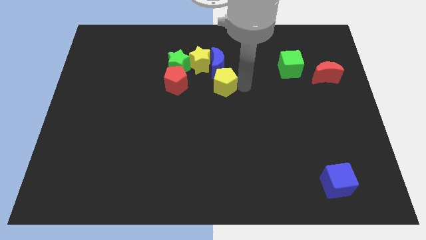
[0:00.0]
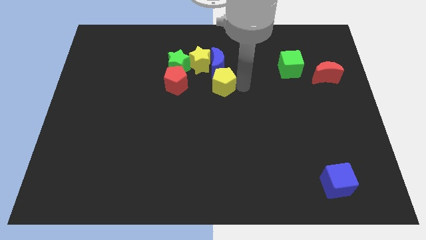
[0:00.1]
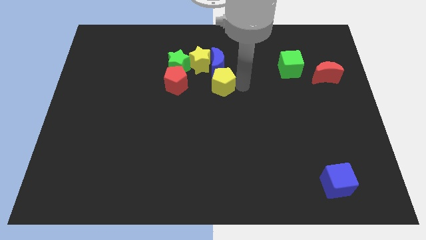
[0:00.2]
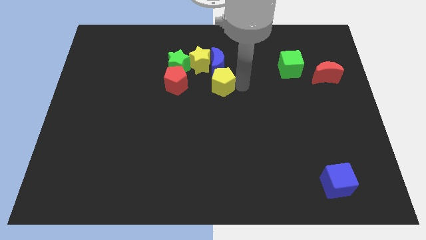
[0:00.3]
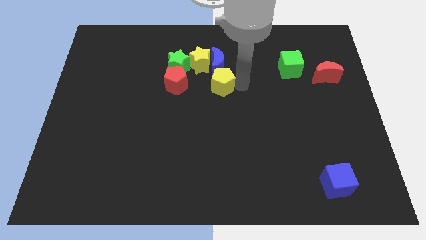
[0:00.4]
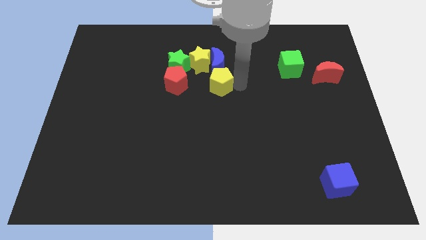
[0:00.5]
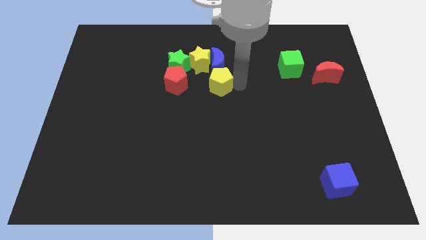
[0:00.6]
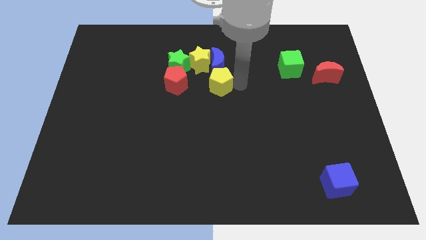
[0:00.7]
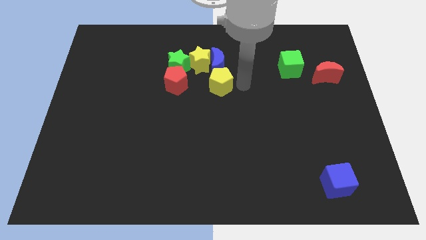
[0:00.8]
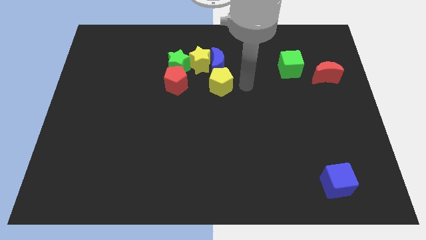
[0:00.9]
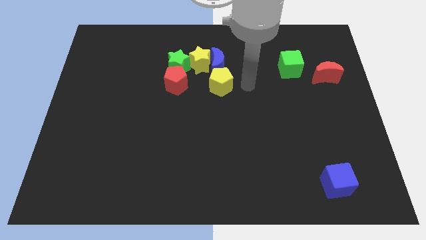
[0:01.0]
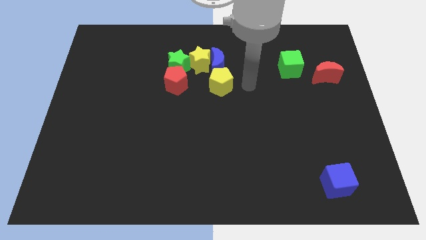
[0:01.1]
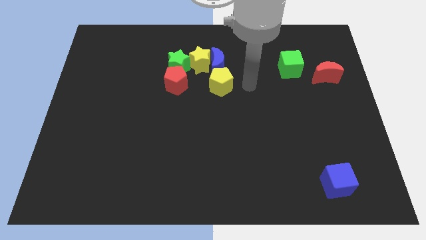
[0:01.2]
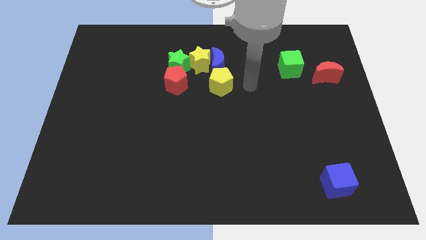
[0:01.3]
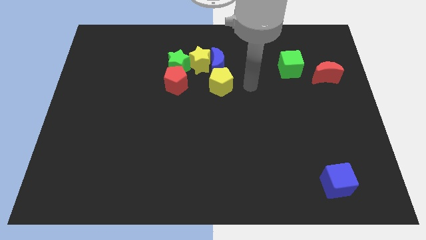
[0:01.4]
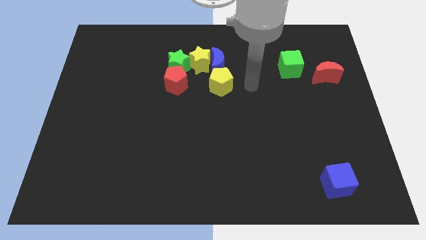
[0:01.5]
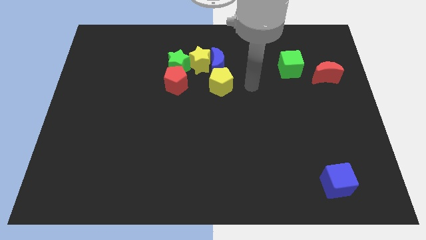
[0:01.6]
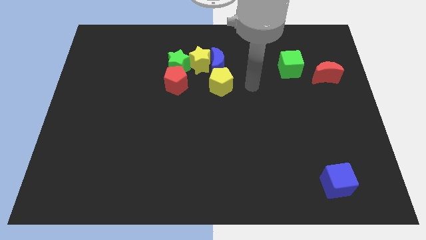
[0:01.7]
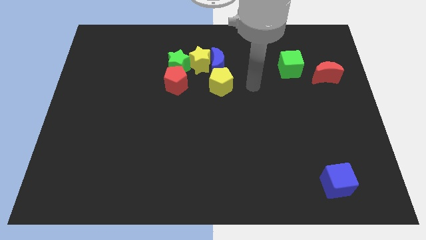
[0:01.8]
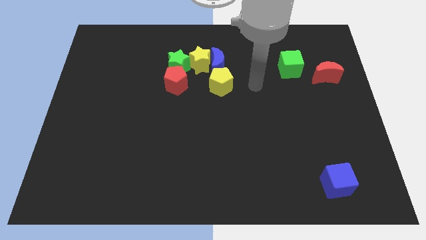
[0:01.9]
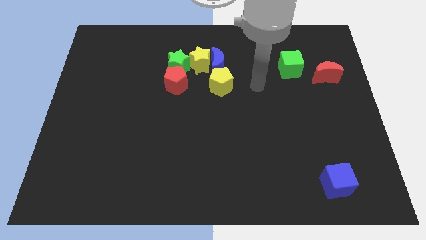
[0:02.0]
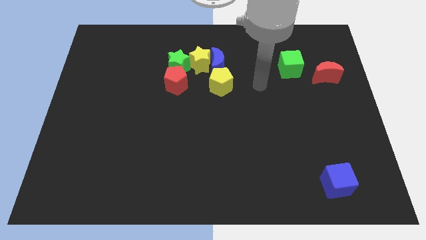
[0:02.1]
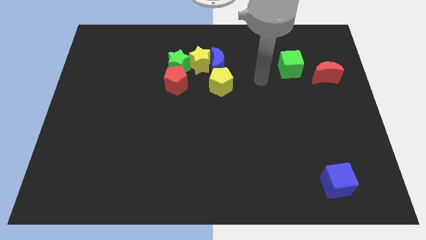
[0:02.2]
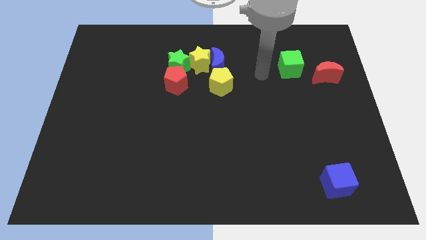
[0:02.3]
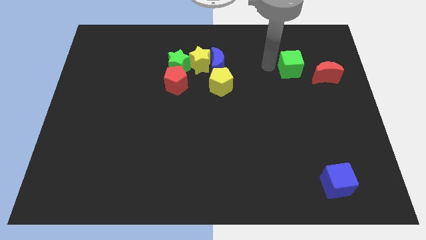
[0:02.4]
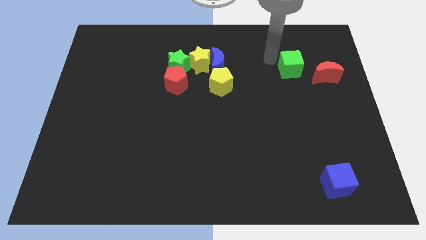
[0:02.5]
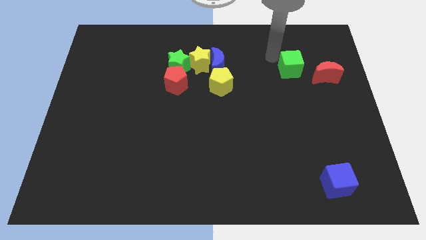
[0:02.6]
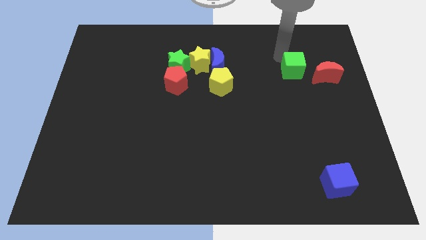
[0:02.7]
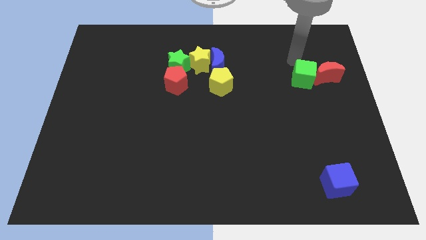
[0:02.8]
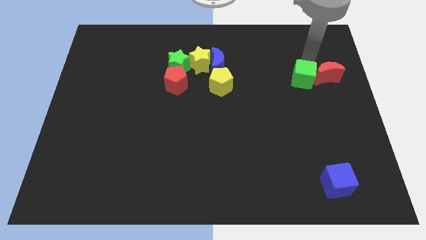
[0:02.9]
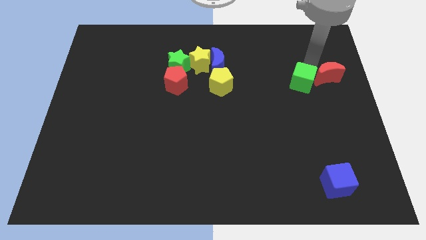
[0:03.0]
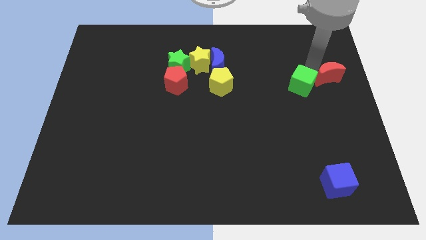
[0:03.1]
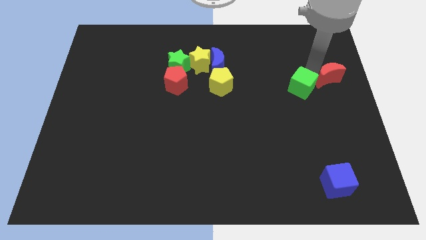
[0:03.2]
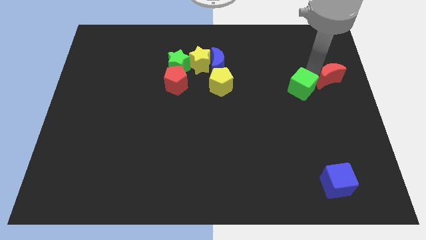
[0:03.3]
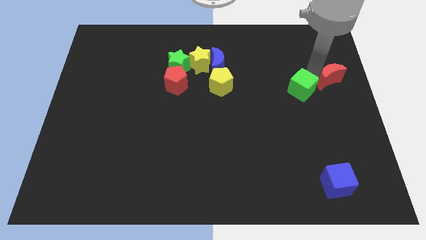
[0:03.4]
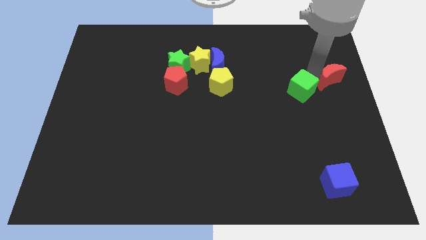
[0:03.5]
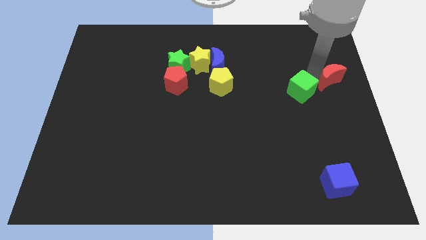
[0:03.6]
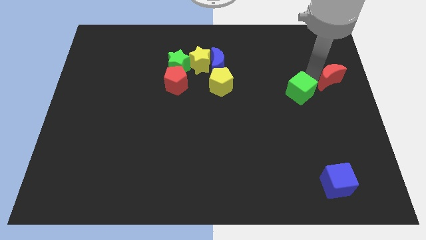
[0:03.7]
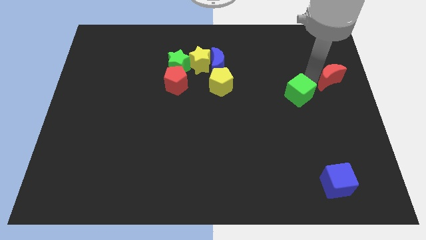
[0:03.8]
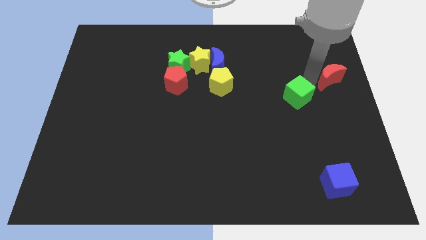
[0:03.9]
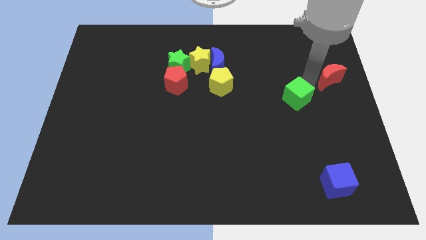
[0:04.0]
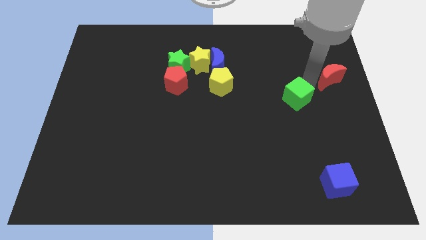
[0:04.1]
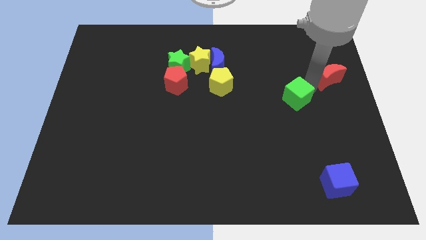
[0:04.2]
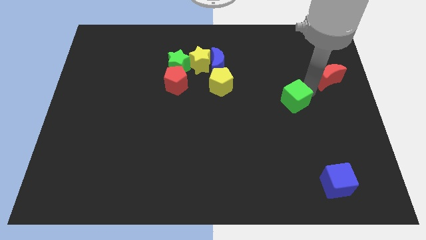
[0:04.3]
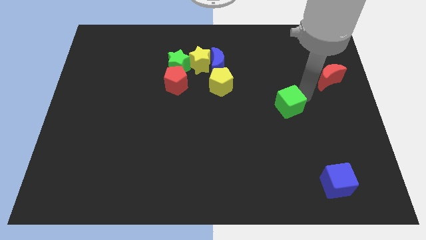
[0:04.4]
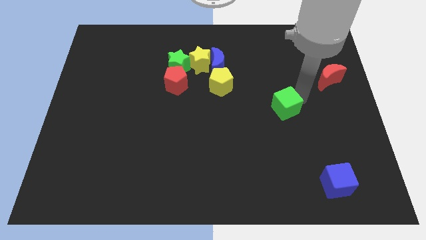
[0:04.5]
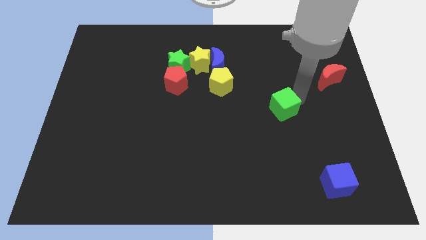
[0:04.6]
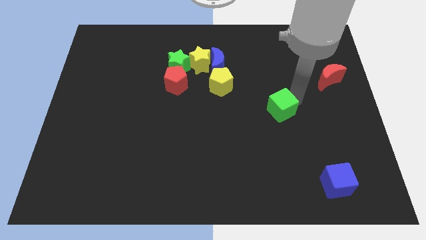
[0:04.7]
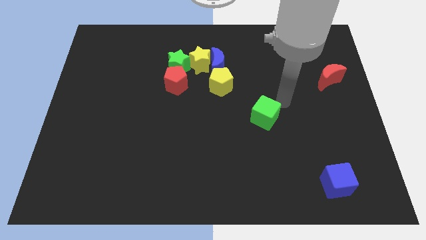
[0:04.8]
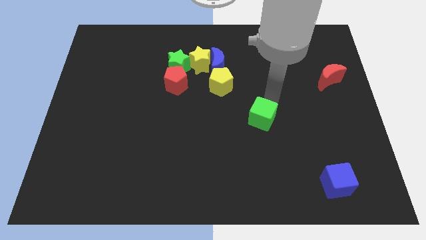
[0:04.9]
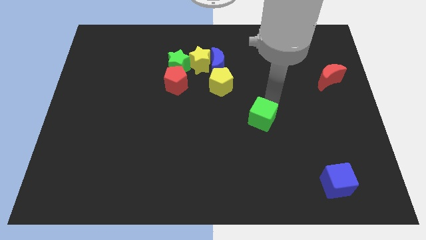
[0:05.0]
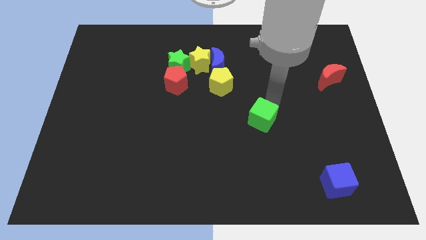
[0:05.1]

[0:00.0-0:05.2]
move the green cube diagonal to the yellow pentagon

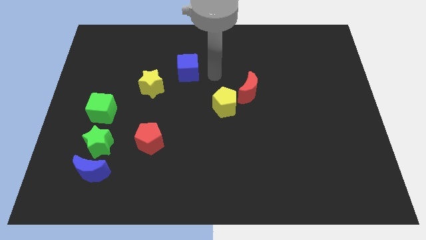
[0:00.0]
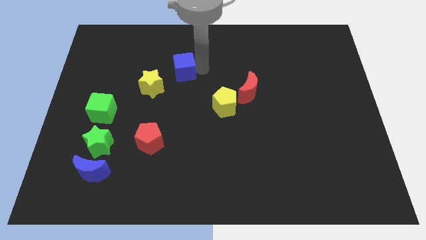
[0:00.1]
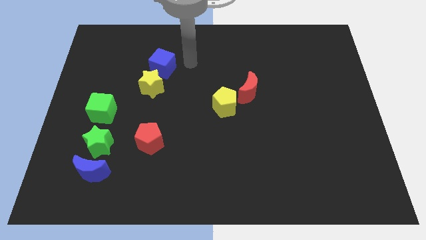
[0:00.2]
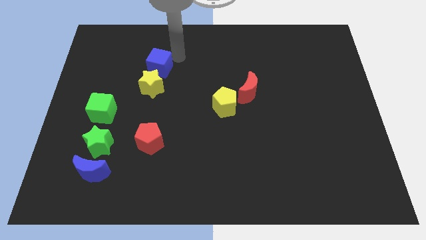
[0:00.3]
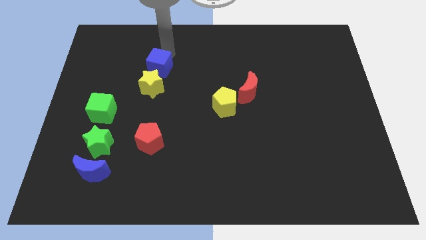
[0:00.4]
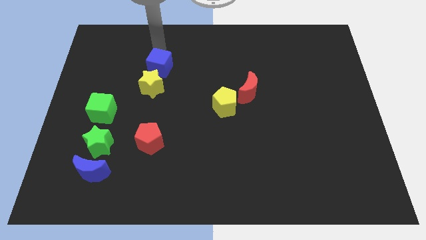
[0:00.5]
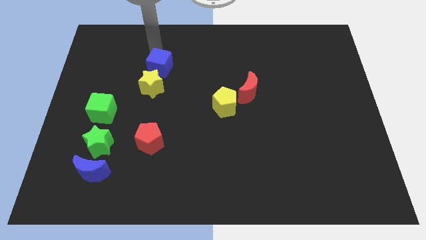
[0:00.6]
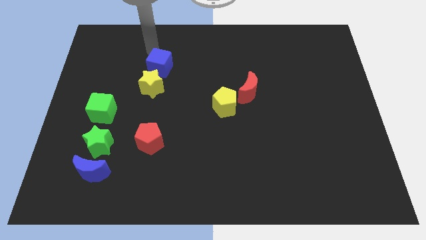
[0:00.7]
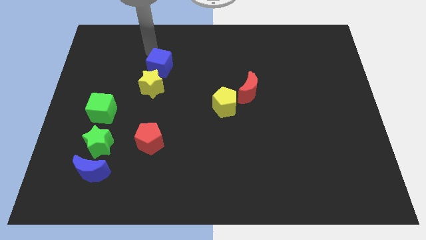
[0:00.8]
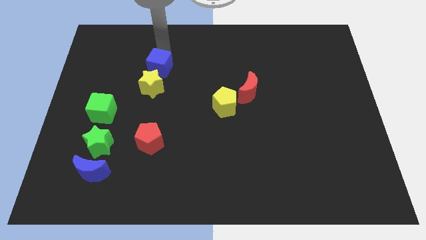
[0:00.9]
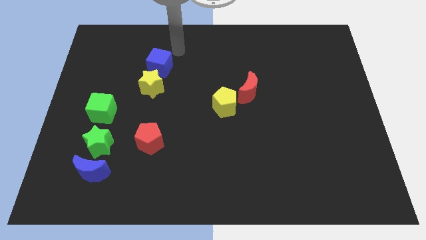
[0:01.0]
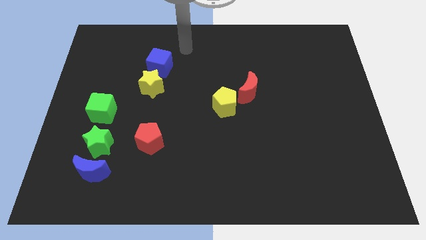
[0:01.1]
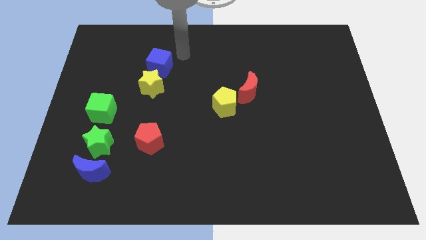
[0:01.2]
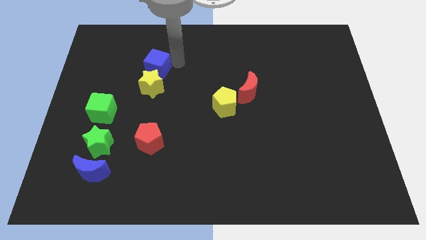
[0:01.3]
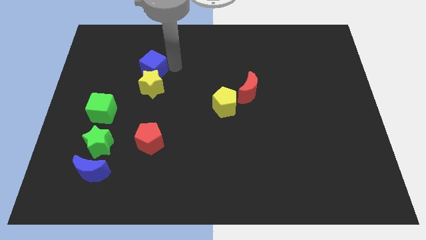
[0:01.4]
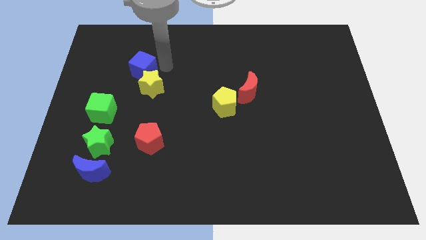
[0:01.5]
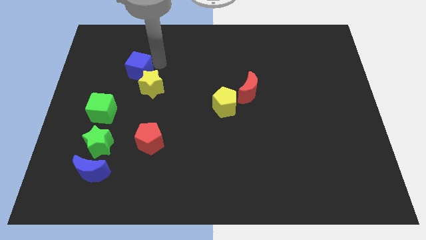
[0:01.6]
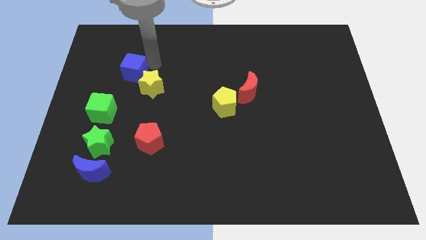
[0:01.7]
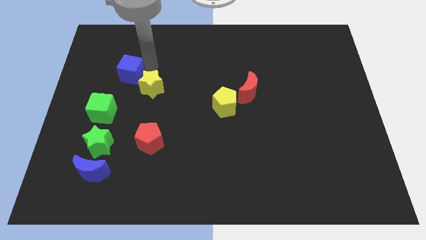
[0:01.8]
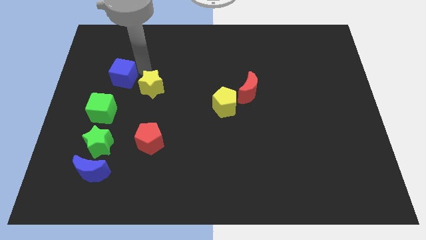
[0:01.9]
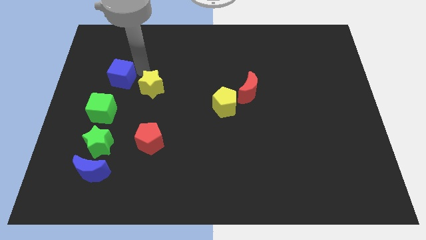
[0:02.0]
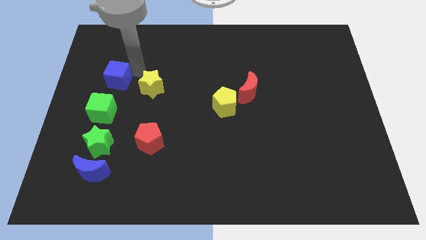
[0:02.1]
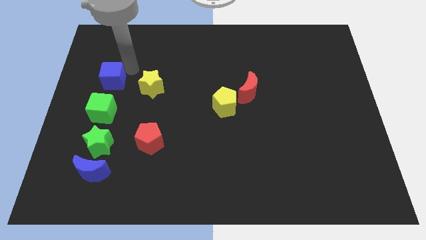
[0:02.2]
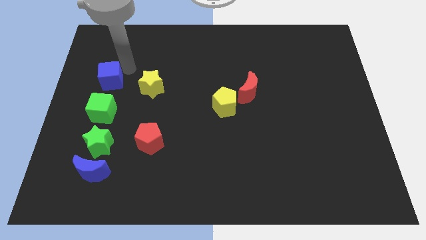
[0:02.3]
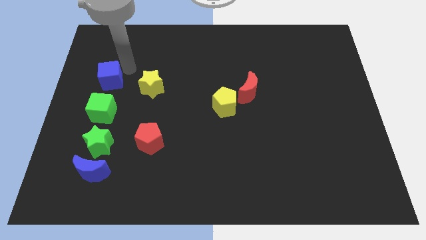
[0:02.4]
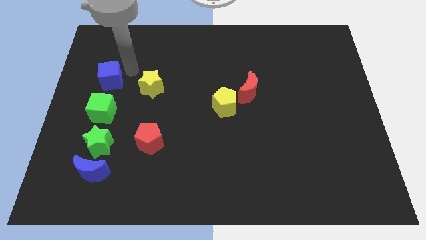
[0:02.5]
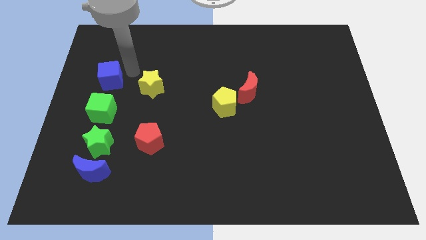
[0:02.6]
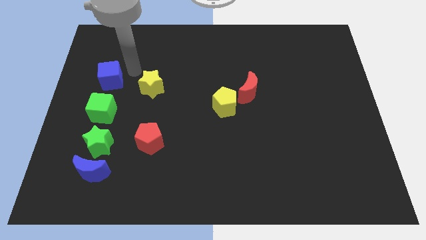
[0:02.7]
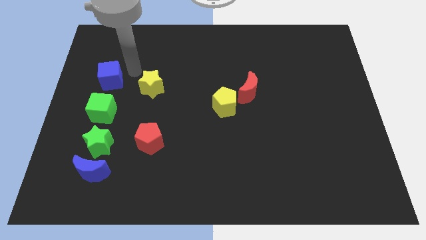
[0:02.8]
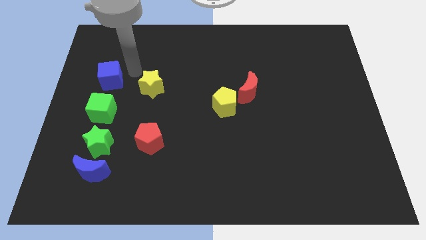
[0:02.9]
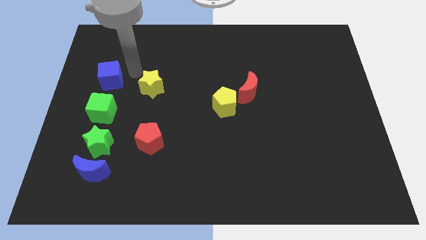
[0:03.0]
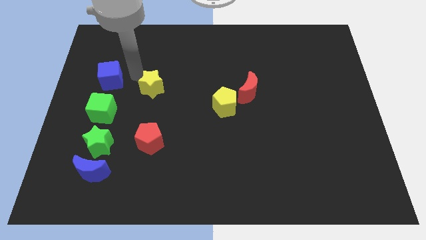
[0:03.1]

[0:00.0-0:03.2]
place blue cube parallel to the yellow star

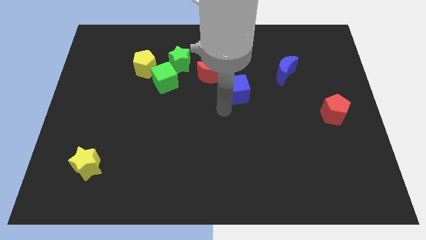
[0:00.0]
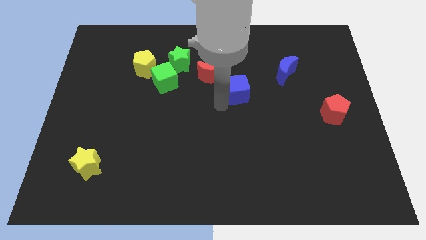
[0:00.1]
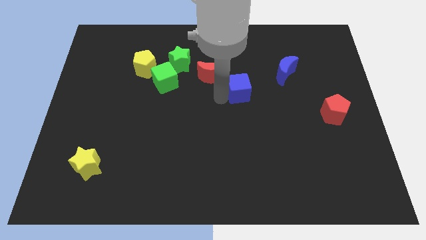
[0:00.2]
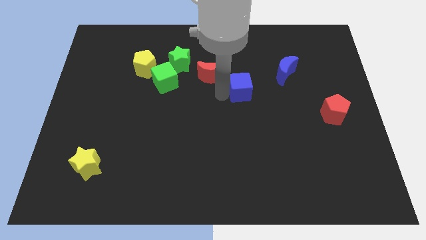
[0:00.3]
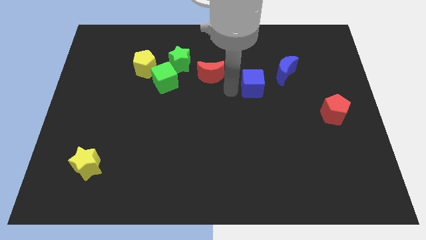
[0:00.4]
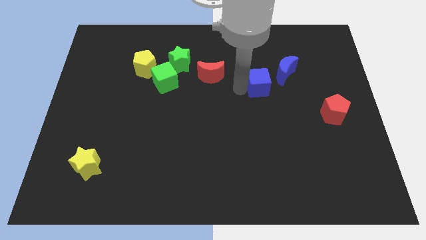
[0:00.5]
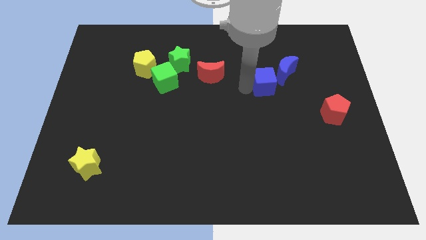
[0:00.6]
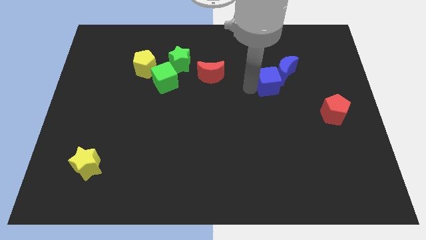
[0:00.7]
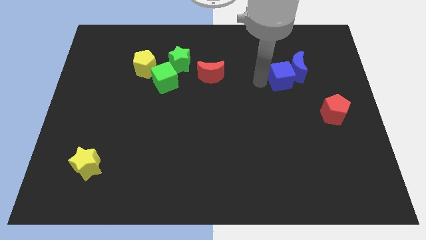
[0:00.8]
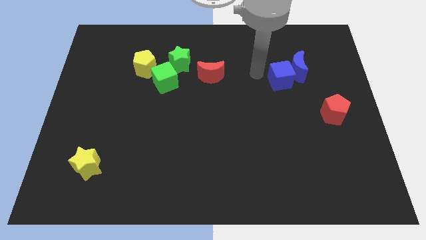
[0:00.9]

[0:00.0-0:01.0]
push the blue cube into the blue crescent
